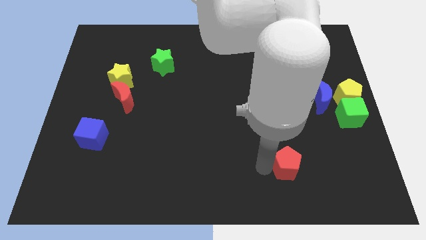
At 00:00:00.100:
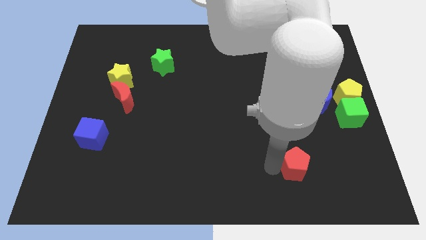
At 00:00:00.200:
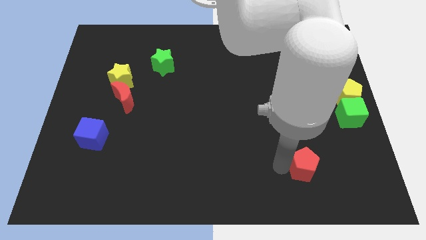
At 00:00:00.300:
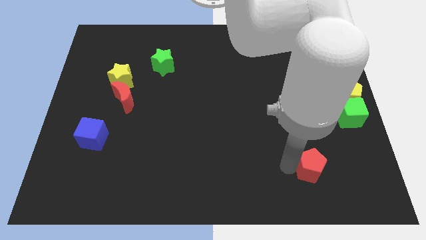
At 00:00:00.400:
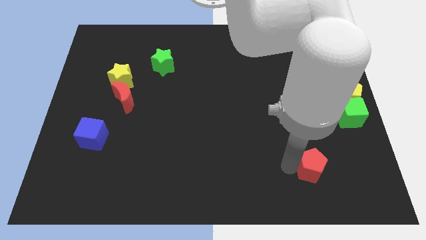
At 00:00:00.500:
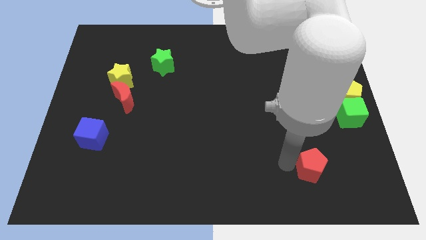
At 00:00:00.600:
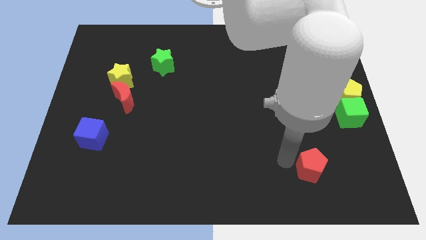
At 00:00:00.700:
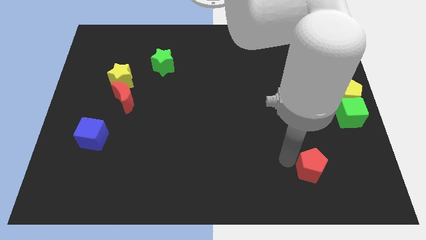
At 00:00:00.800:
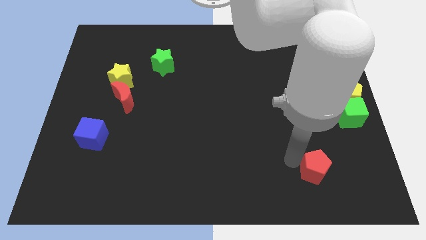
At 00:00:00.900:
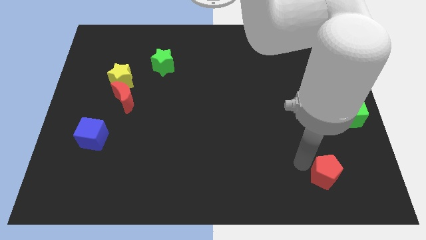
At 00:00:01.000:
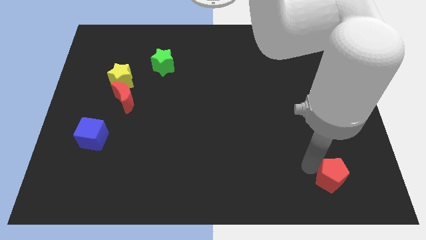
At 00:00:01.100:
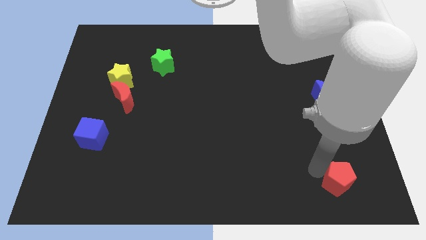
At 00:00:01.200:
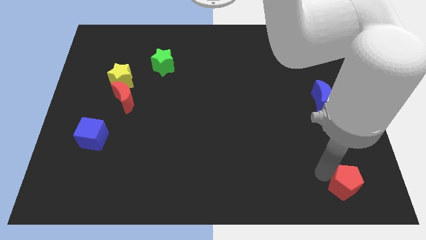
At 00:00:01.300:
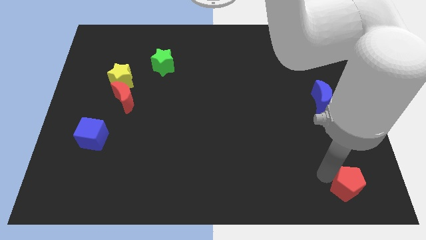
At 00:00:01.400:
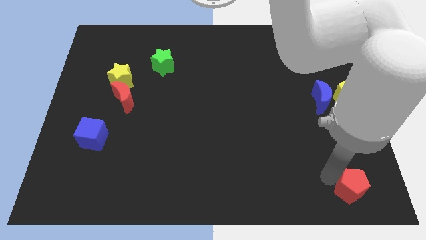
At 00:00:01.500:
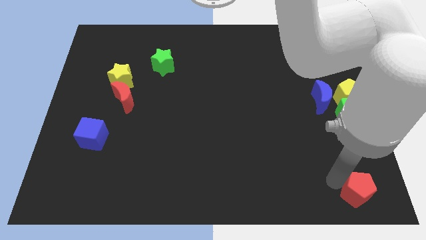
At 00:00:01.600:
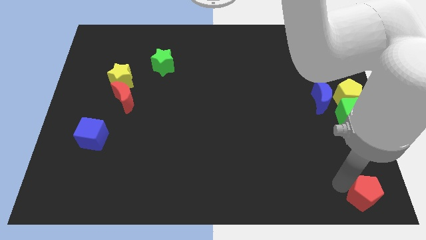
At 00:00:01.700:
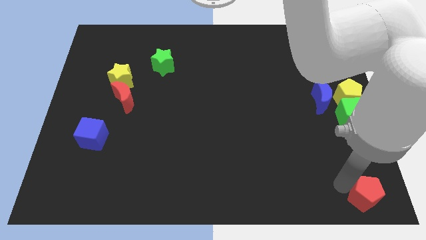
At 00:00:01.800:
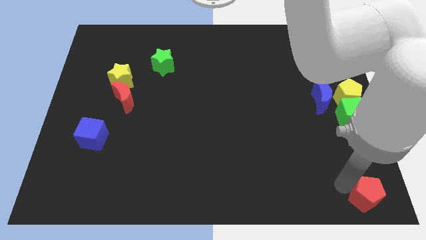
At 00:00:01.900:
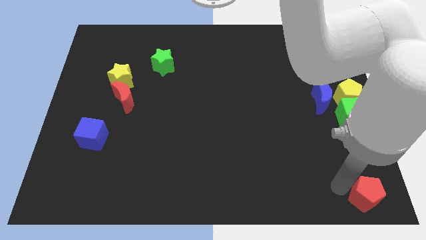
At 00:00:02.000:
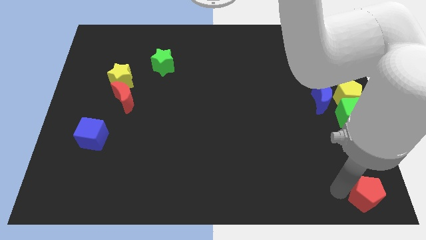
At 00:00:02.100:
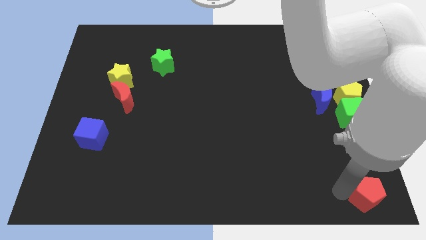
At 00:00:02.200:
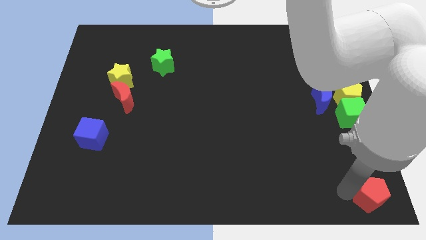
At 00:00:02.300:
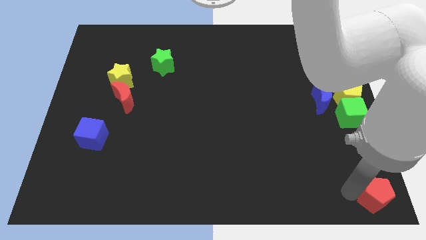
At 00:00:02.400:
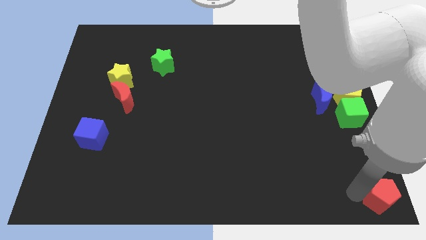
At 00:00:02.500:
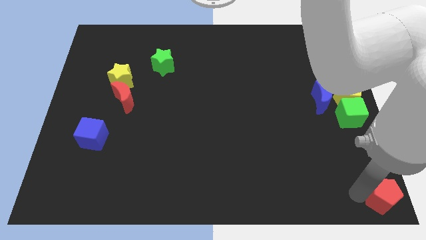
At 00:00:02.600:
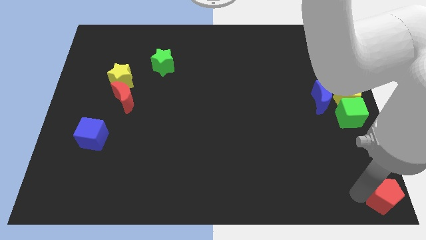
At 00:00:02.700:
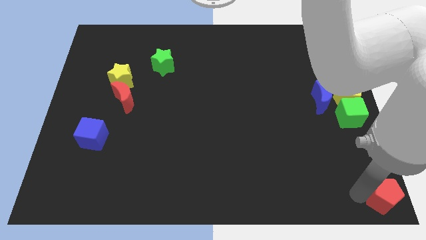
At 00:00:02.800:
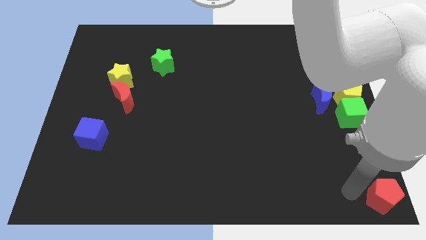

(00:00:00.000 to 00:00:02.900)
place the red pentagon to the bottom right corner of the board

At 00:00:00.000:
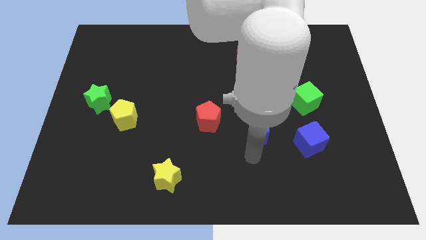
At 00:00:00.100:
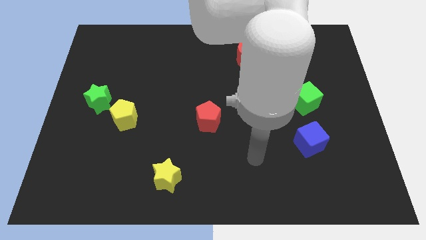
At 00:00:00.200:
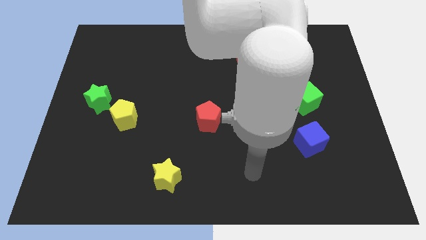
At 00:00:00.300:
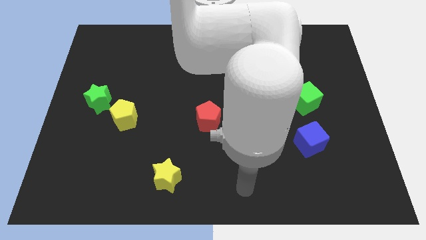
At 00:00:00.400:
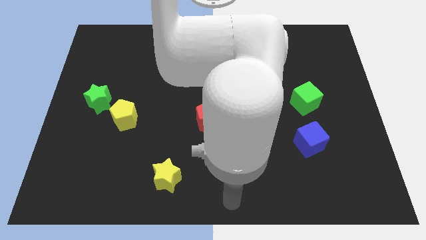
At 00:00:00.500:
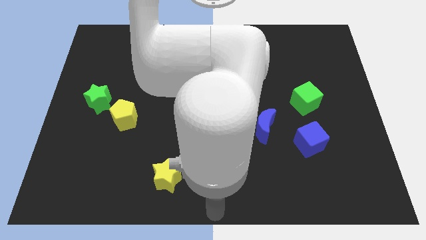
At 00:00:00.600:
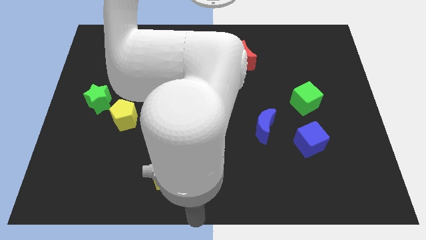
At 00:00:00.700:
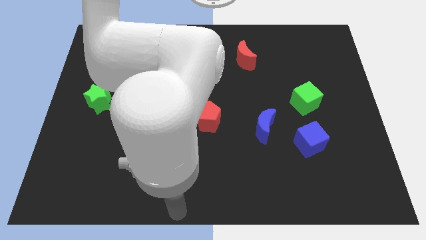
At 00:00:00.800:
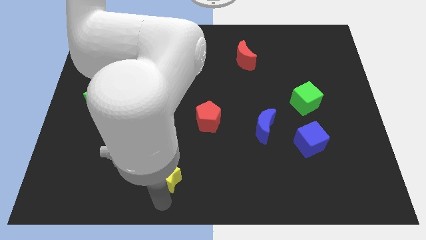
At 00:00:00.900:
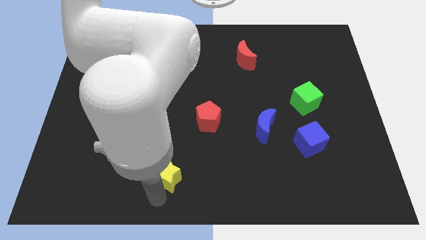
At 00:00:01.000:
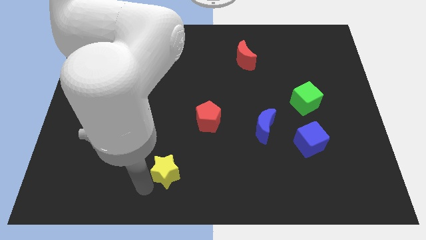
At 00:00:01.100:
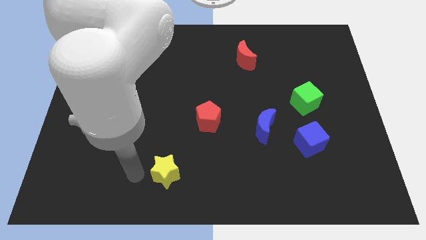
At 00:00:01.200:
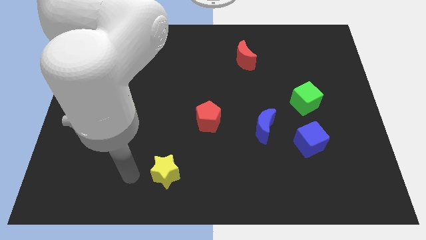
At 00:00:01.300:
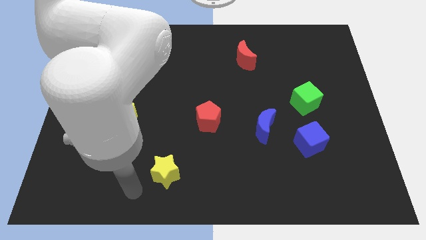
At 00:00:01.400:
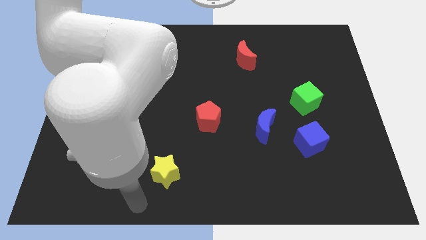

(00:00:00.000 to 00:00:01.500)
move your arm to the left of the yellow star

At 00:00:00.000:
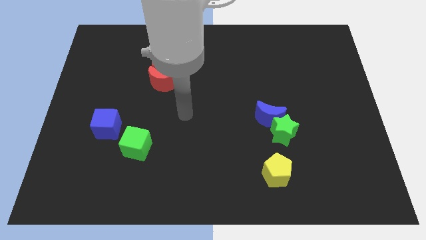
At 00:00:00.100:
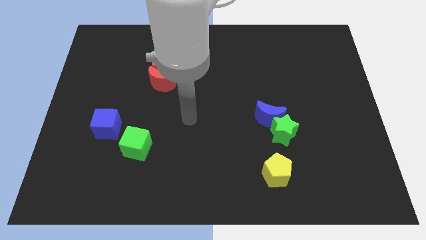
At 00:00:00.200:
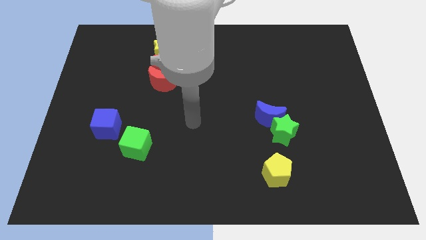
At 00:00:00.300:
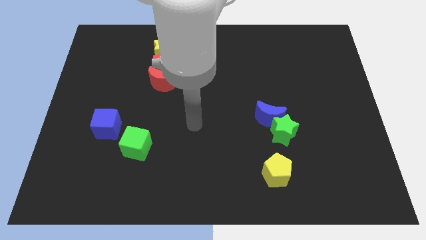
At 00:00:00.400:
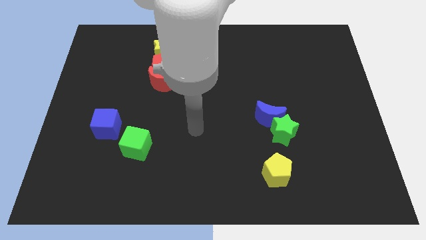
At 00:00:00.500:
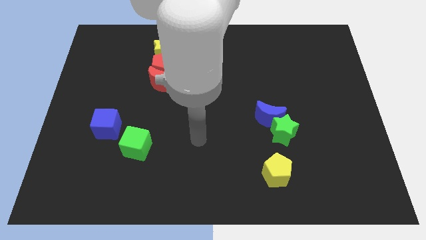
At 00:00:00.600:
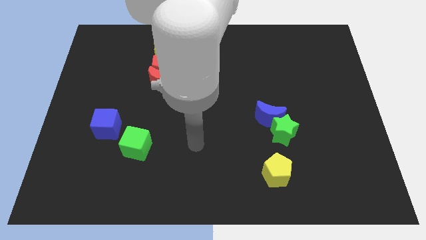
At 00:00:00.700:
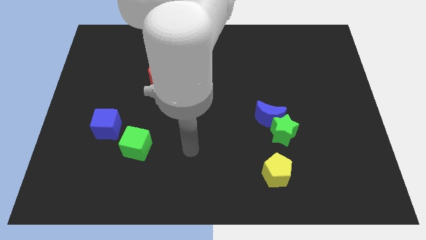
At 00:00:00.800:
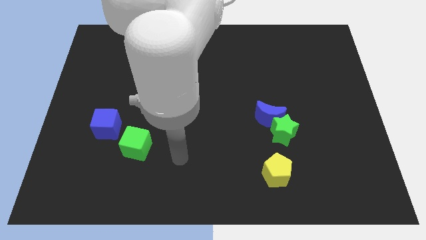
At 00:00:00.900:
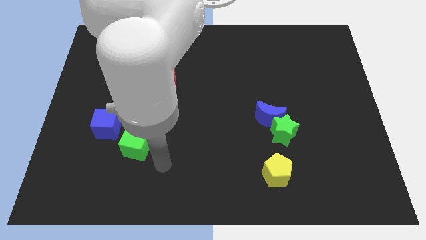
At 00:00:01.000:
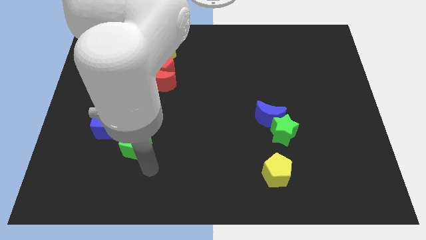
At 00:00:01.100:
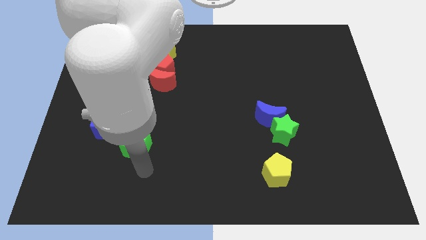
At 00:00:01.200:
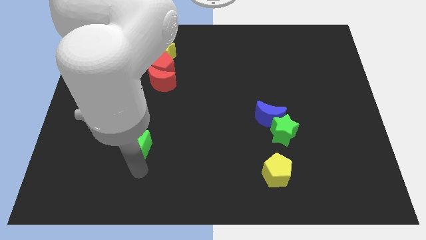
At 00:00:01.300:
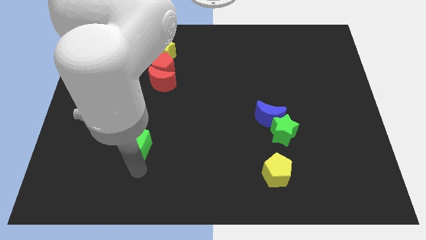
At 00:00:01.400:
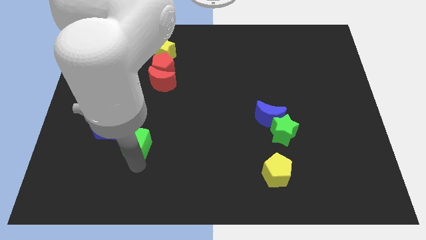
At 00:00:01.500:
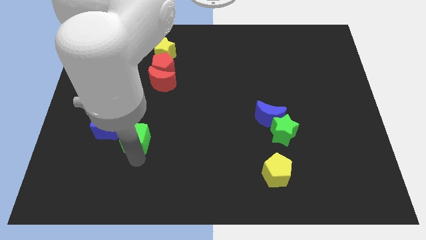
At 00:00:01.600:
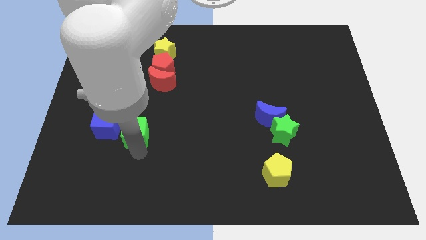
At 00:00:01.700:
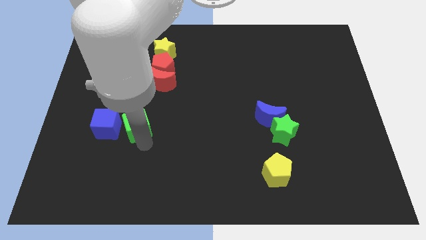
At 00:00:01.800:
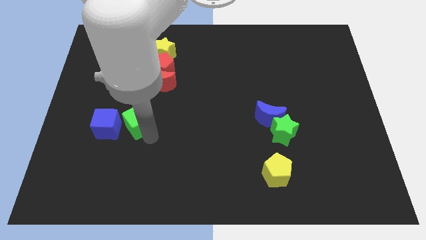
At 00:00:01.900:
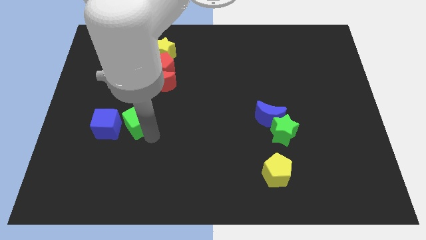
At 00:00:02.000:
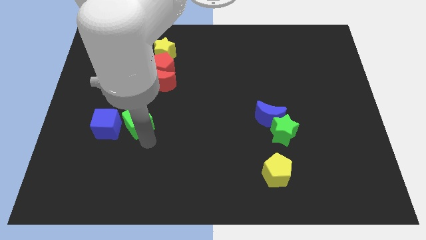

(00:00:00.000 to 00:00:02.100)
put the green cube to the right side of the blue cube

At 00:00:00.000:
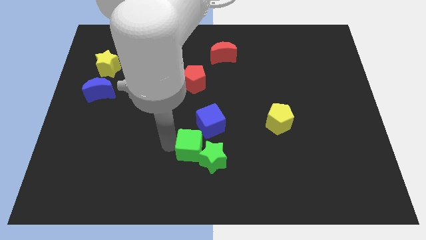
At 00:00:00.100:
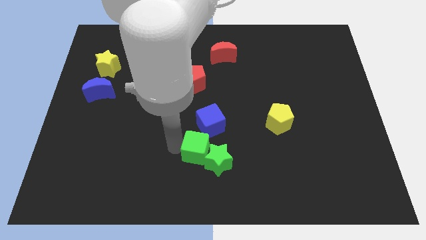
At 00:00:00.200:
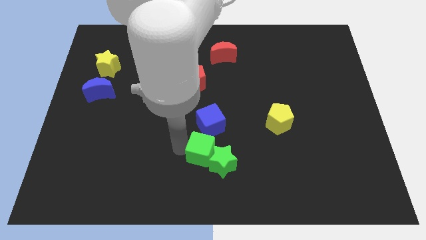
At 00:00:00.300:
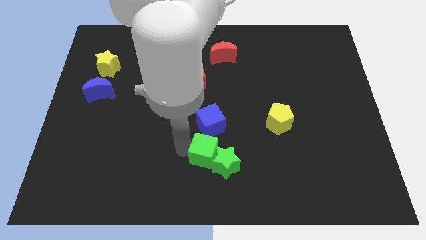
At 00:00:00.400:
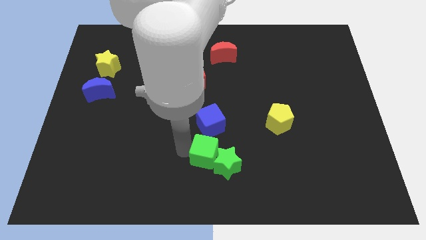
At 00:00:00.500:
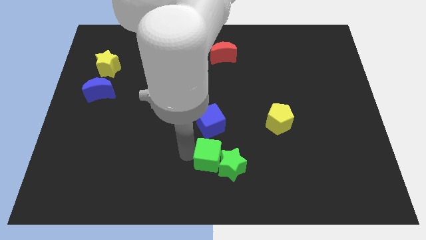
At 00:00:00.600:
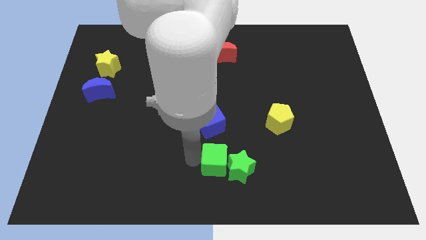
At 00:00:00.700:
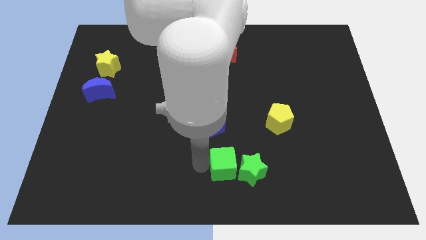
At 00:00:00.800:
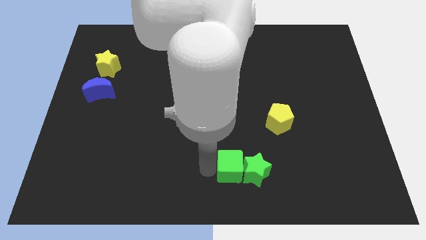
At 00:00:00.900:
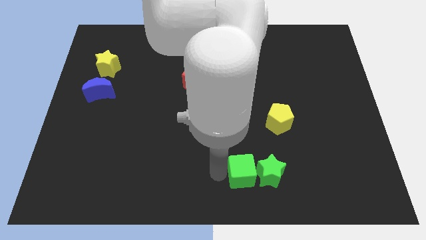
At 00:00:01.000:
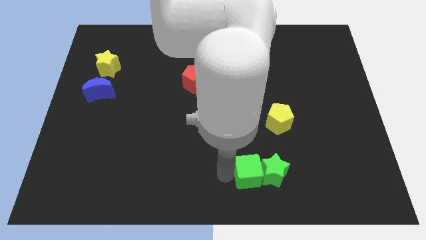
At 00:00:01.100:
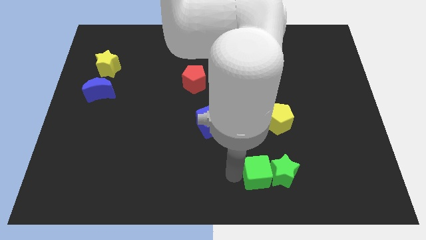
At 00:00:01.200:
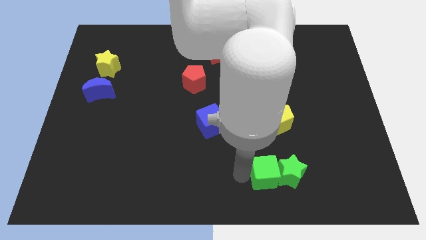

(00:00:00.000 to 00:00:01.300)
move the green star to the bottom side of the yellow pentagon

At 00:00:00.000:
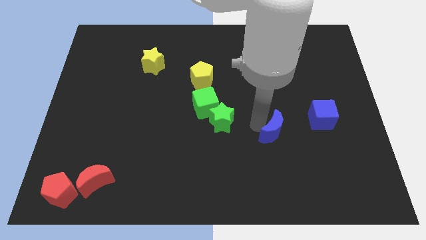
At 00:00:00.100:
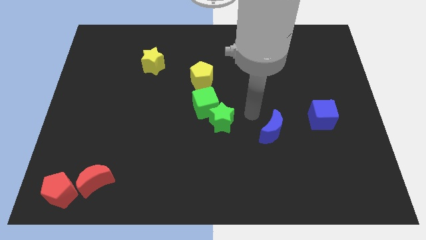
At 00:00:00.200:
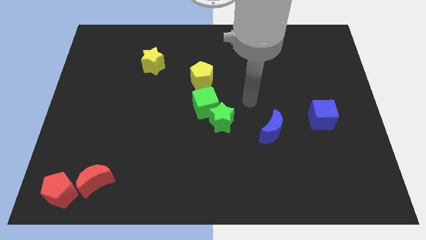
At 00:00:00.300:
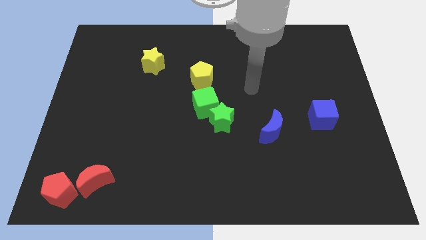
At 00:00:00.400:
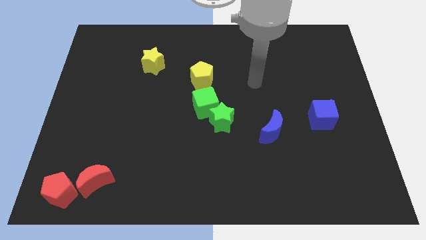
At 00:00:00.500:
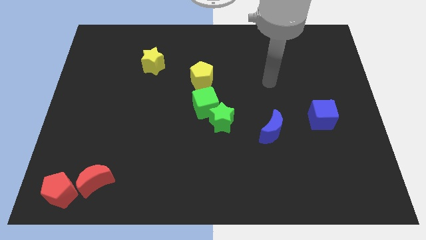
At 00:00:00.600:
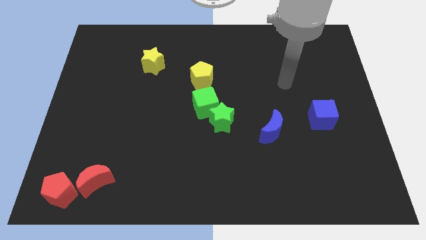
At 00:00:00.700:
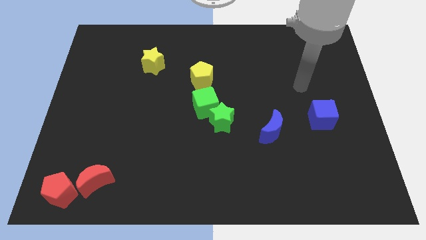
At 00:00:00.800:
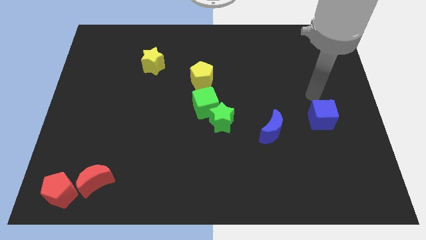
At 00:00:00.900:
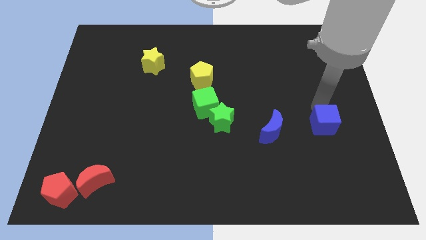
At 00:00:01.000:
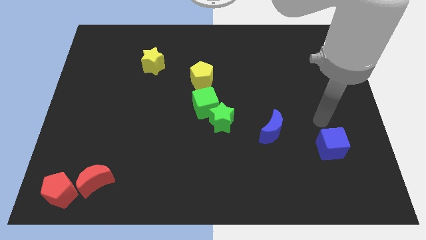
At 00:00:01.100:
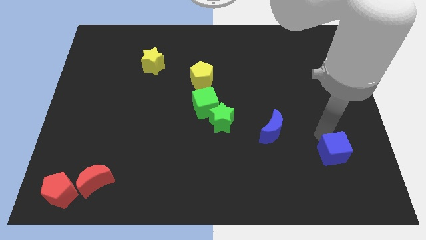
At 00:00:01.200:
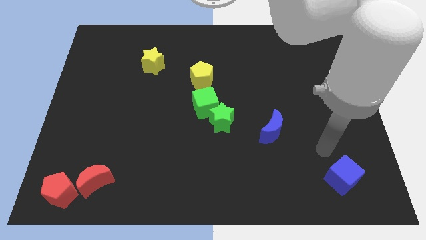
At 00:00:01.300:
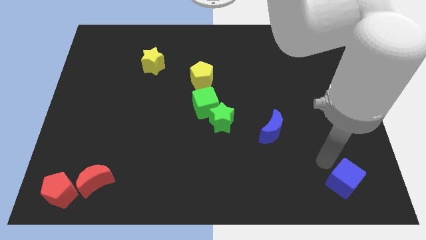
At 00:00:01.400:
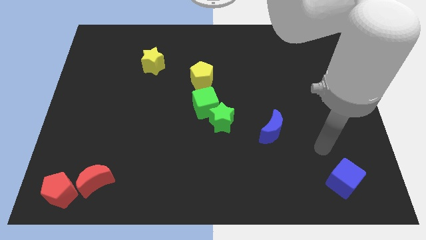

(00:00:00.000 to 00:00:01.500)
put the blue cube diagonally below the bottom right side of the blue crescent
